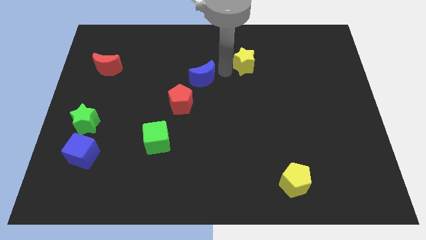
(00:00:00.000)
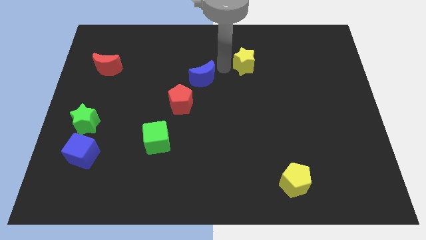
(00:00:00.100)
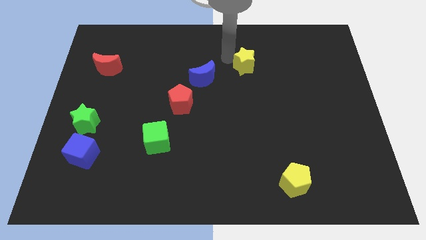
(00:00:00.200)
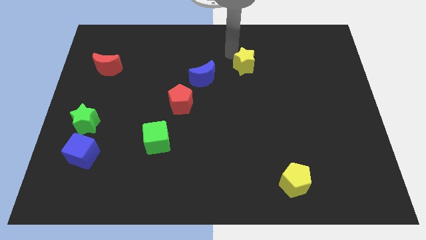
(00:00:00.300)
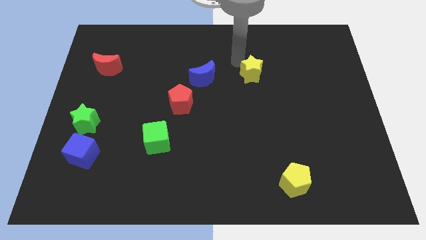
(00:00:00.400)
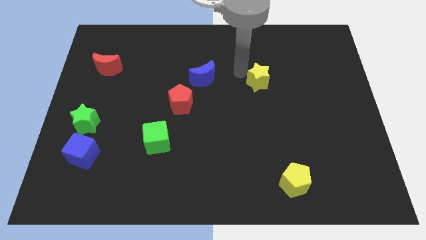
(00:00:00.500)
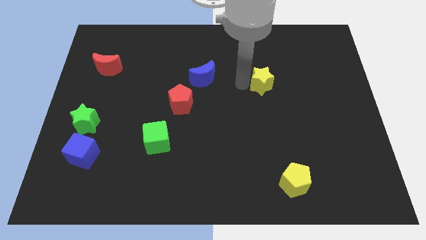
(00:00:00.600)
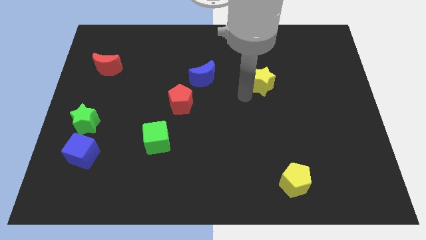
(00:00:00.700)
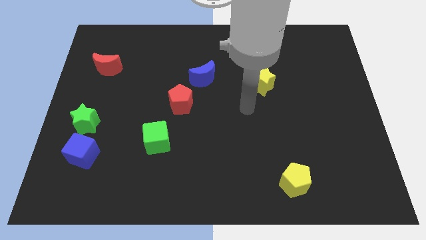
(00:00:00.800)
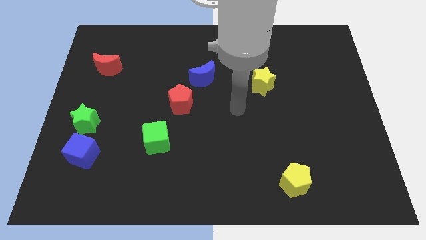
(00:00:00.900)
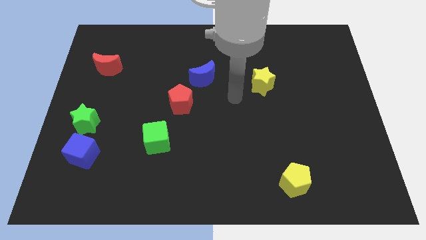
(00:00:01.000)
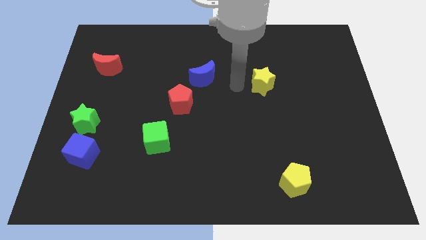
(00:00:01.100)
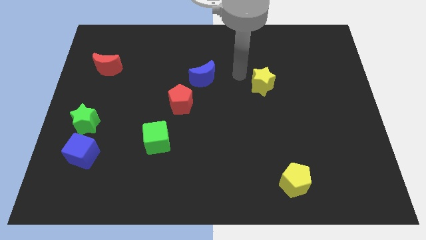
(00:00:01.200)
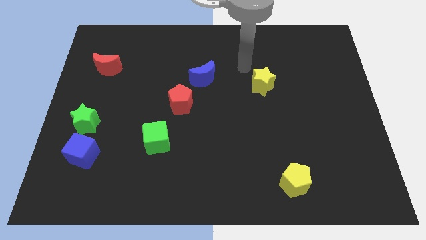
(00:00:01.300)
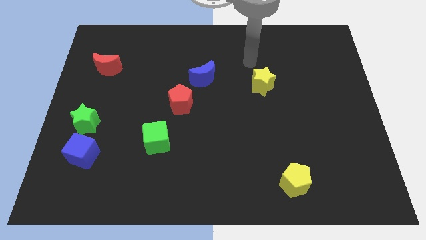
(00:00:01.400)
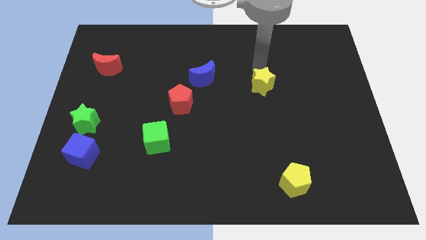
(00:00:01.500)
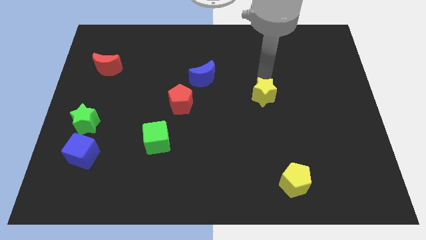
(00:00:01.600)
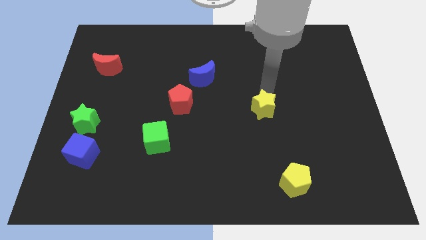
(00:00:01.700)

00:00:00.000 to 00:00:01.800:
place yellow star to the right of the red pentagon

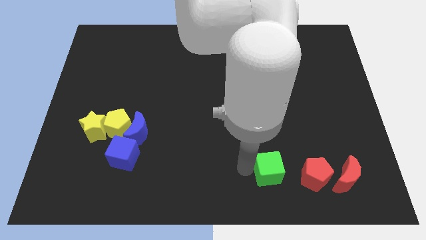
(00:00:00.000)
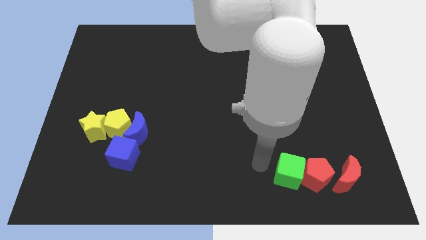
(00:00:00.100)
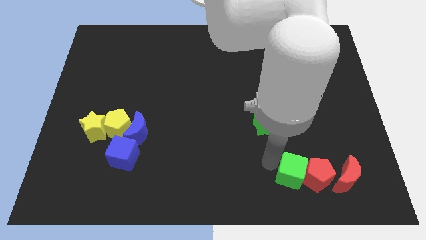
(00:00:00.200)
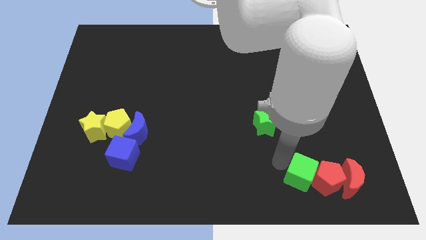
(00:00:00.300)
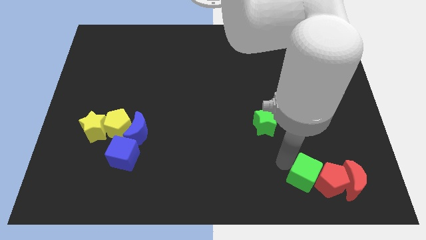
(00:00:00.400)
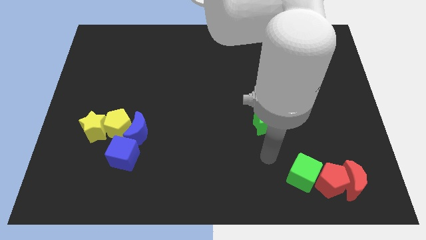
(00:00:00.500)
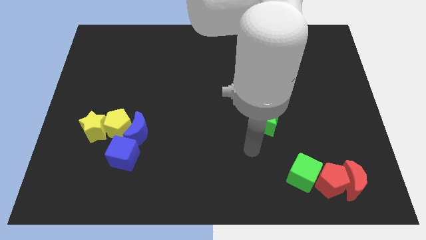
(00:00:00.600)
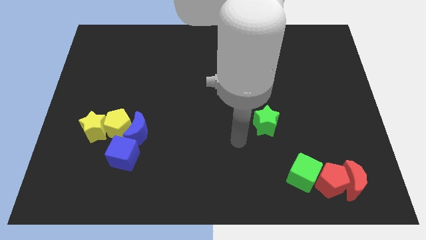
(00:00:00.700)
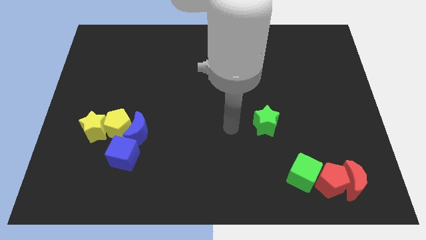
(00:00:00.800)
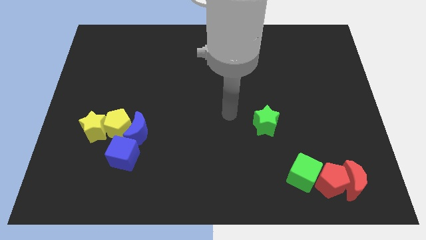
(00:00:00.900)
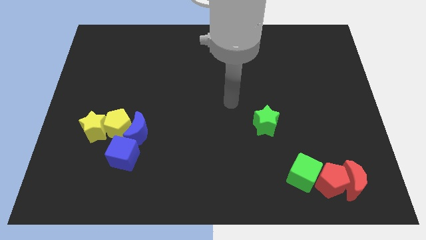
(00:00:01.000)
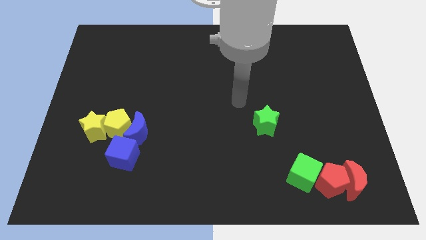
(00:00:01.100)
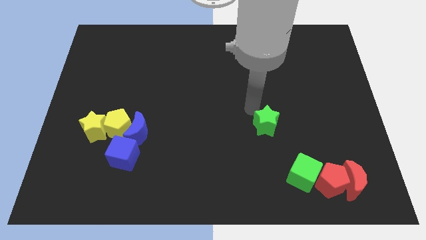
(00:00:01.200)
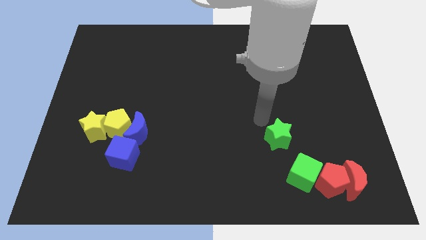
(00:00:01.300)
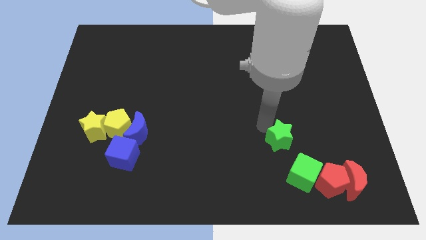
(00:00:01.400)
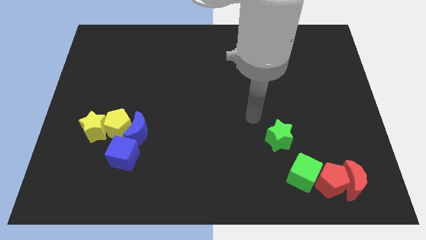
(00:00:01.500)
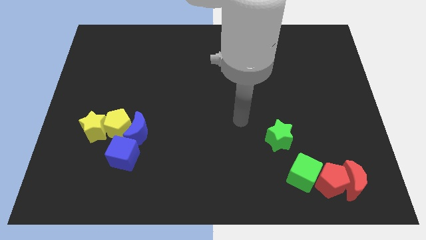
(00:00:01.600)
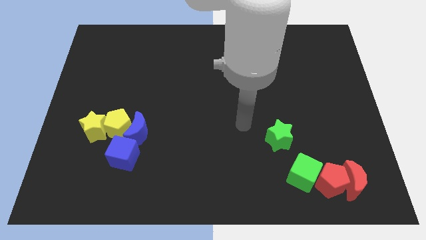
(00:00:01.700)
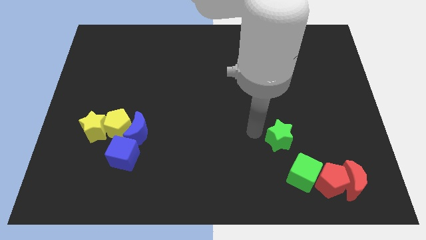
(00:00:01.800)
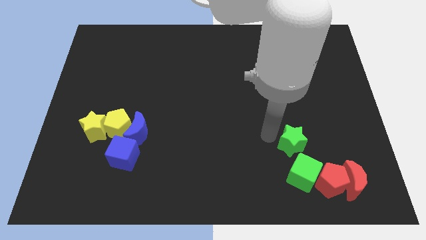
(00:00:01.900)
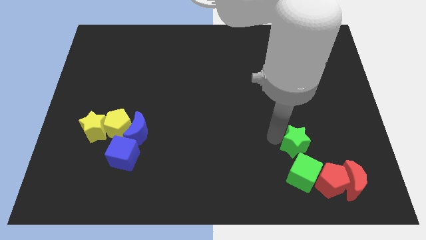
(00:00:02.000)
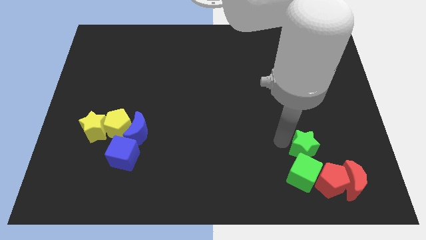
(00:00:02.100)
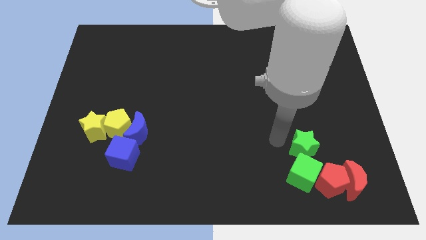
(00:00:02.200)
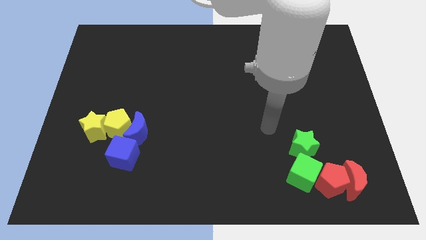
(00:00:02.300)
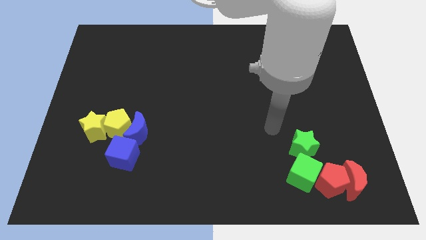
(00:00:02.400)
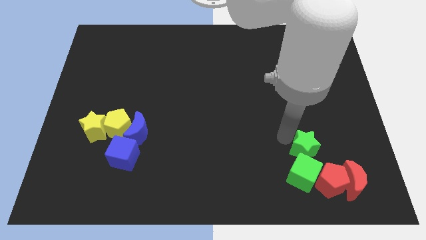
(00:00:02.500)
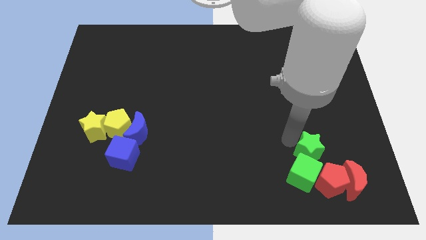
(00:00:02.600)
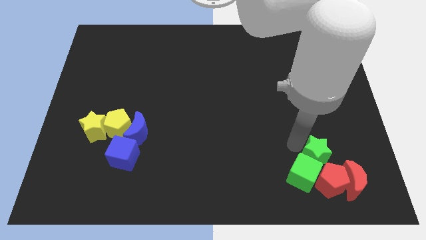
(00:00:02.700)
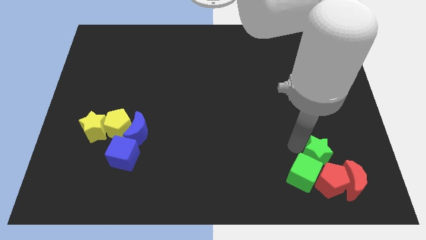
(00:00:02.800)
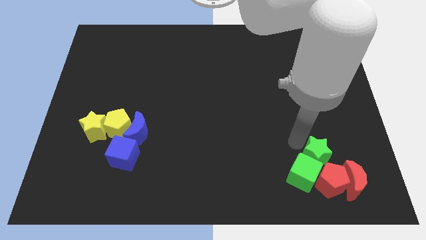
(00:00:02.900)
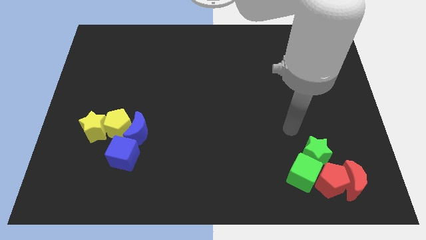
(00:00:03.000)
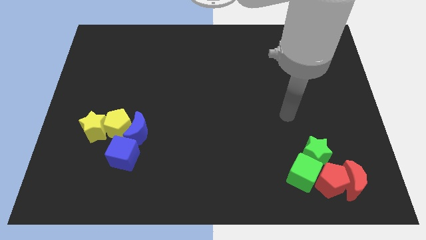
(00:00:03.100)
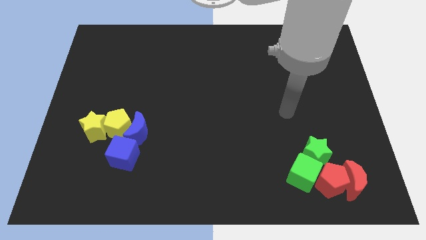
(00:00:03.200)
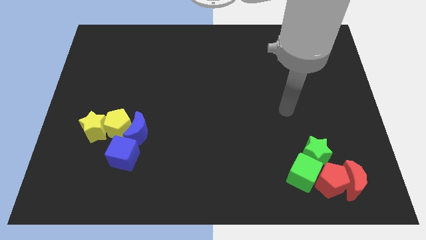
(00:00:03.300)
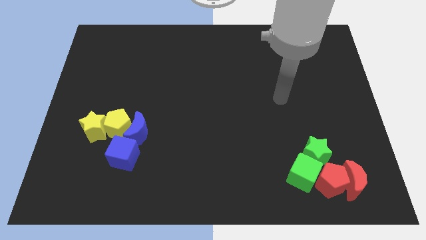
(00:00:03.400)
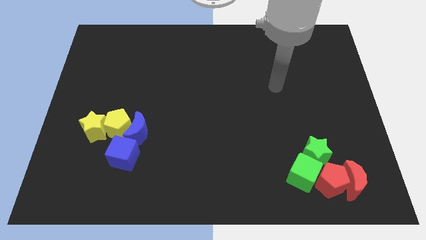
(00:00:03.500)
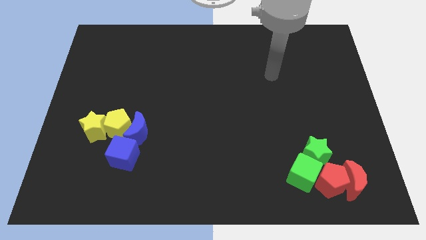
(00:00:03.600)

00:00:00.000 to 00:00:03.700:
make a group of green and red blocks

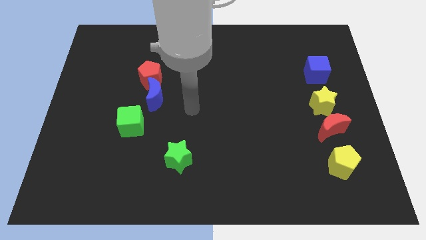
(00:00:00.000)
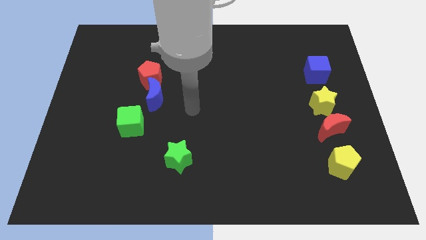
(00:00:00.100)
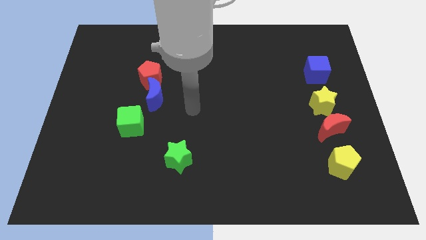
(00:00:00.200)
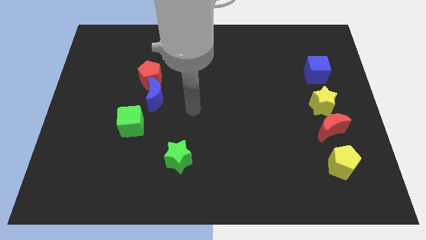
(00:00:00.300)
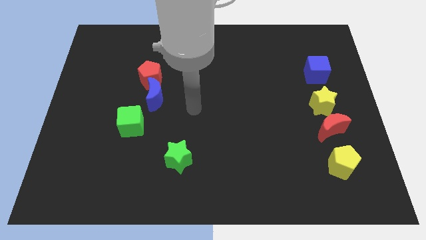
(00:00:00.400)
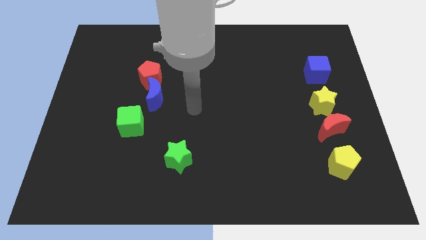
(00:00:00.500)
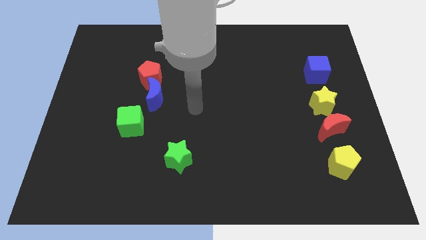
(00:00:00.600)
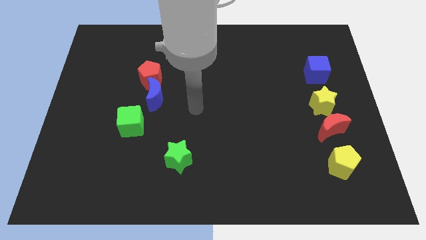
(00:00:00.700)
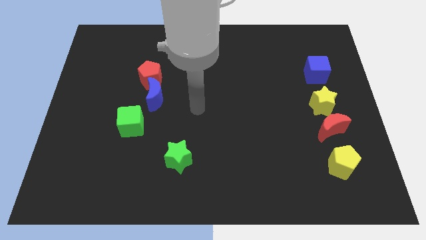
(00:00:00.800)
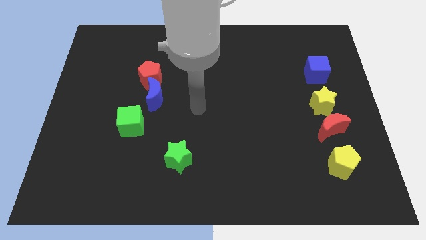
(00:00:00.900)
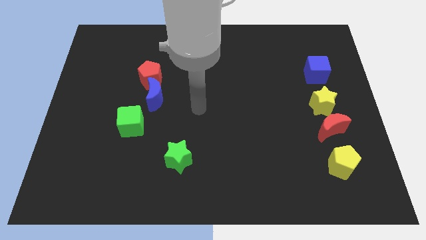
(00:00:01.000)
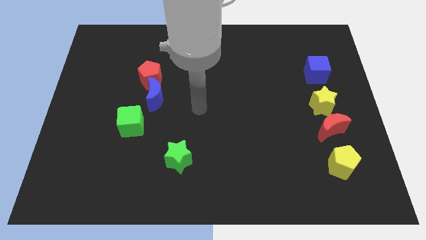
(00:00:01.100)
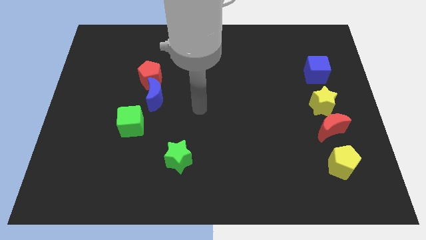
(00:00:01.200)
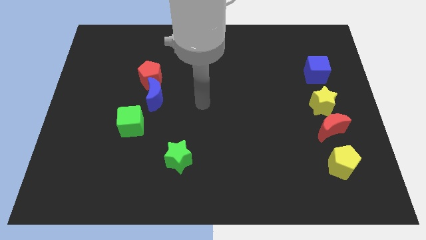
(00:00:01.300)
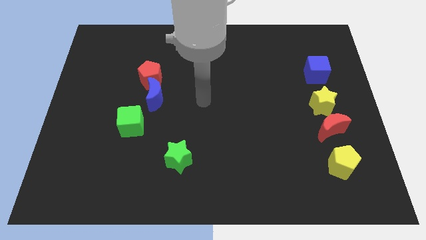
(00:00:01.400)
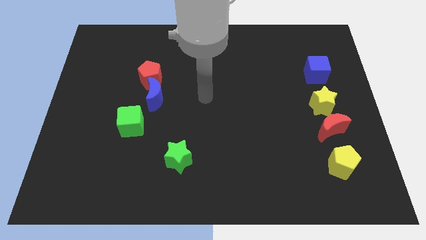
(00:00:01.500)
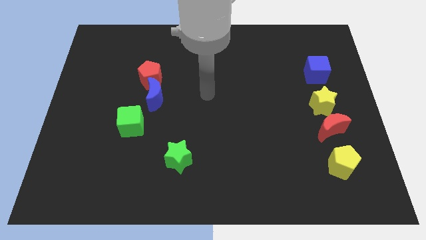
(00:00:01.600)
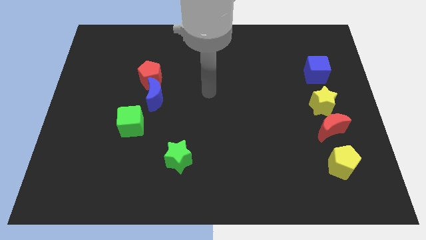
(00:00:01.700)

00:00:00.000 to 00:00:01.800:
place your arm at the center of the board

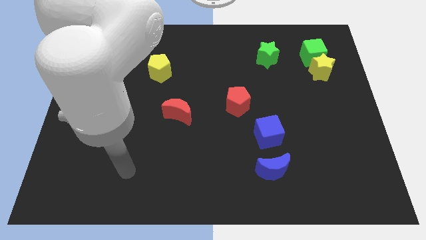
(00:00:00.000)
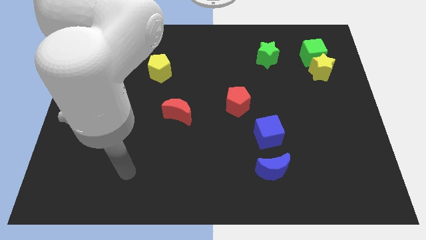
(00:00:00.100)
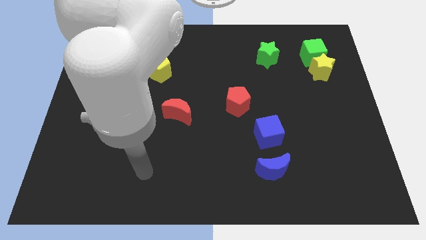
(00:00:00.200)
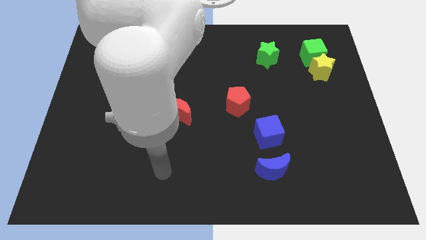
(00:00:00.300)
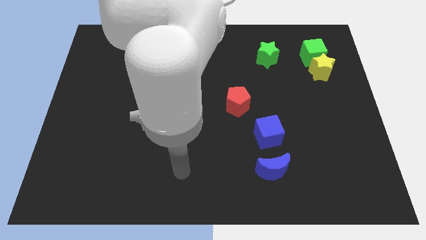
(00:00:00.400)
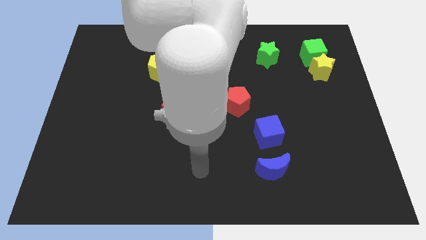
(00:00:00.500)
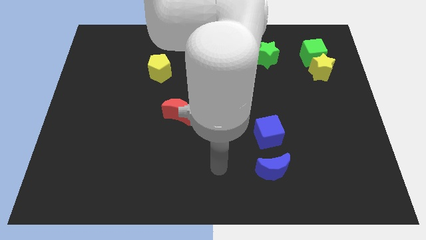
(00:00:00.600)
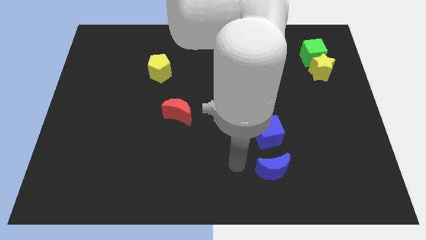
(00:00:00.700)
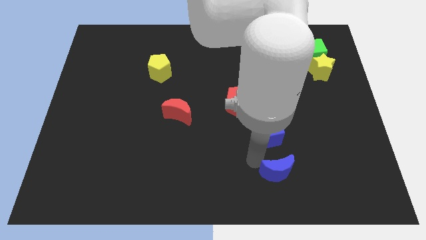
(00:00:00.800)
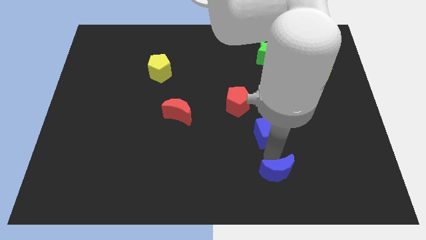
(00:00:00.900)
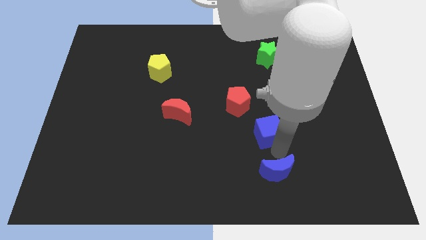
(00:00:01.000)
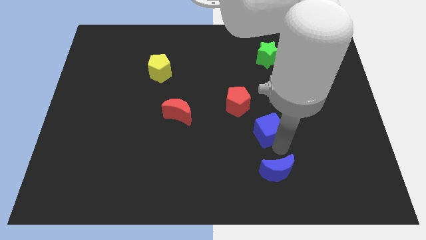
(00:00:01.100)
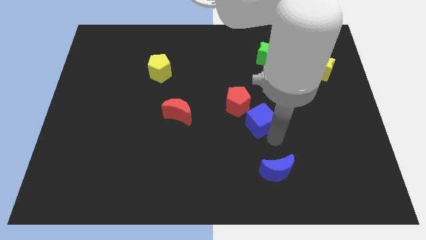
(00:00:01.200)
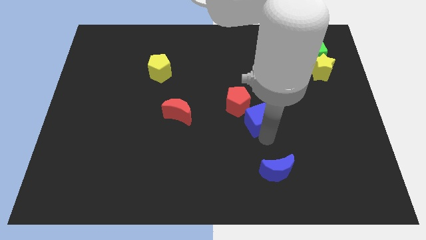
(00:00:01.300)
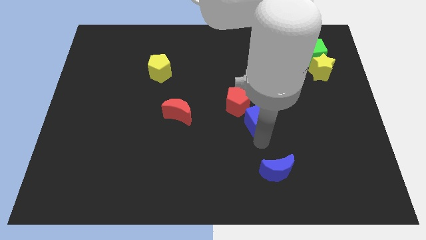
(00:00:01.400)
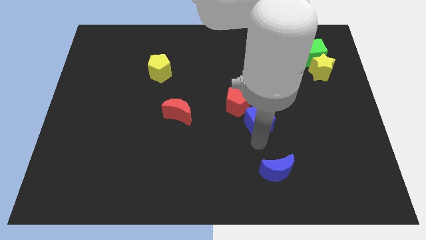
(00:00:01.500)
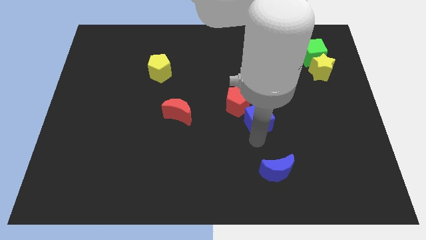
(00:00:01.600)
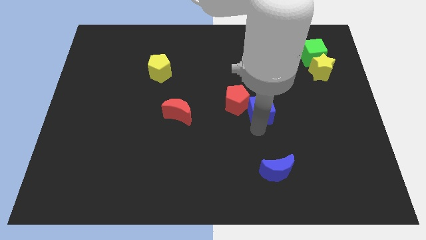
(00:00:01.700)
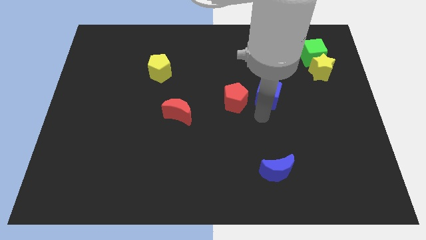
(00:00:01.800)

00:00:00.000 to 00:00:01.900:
place the blue cube parallel right to the red pentagon
